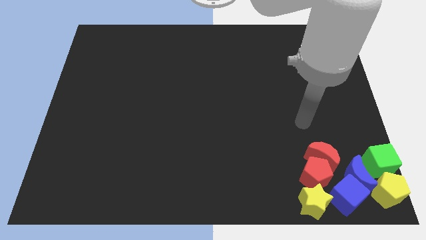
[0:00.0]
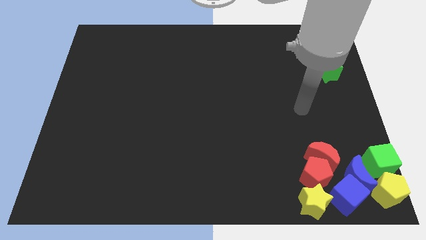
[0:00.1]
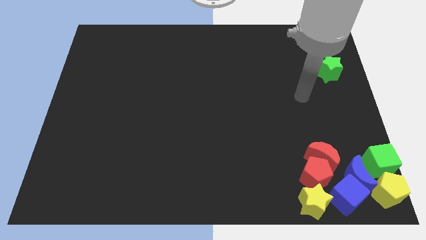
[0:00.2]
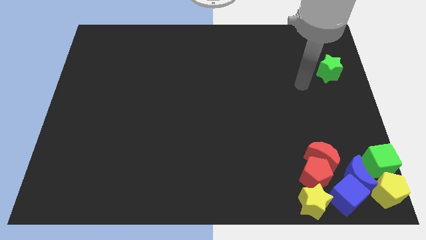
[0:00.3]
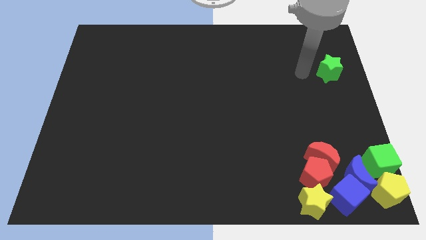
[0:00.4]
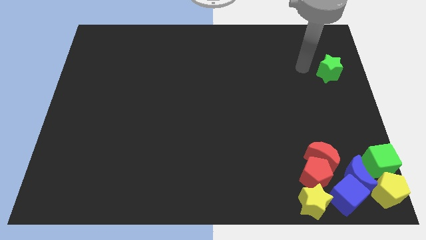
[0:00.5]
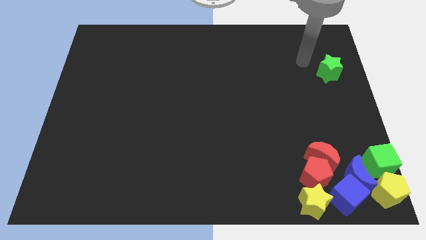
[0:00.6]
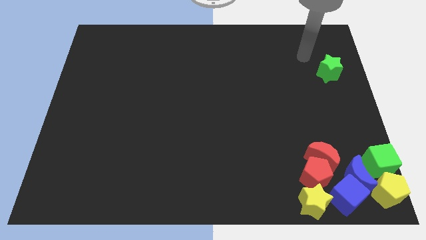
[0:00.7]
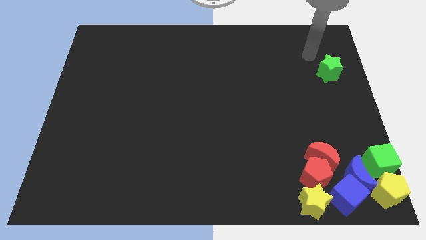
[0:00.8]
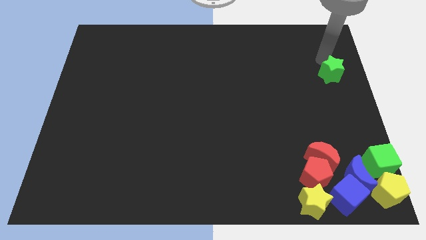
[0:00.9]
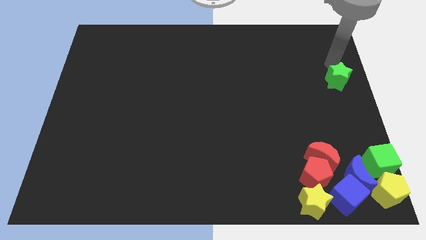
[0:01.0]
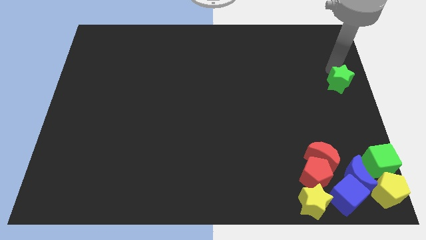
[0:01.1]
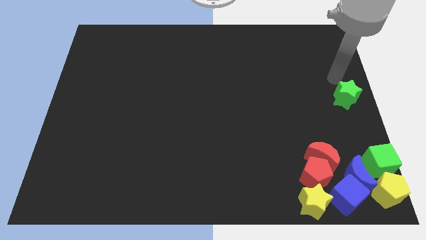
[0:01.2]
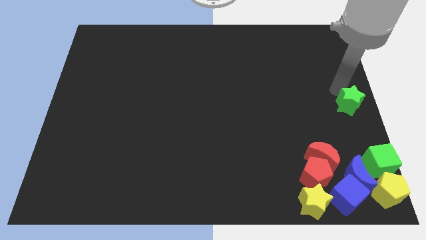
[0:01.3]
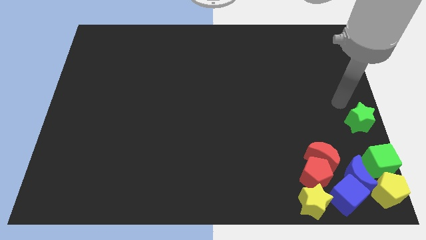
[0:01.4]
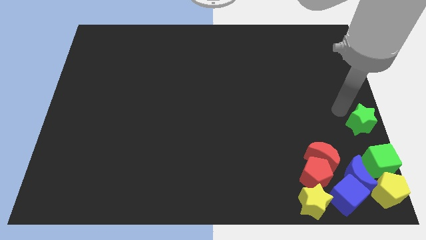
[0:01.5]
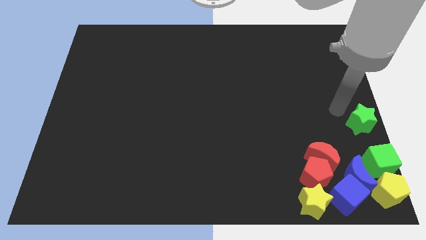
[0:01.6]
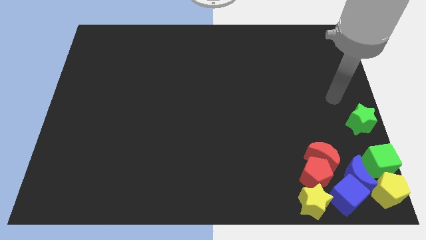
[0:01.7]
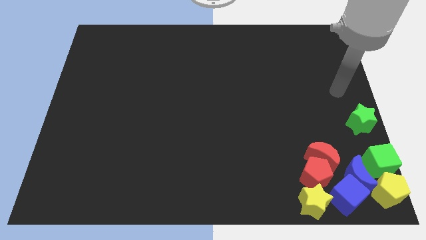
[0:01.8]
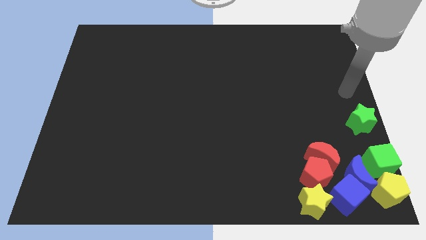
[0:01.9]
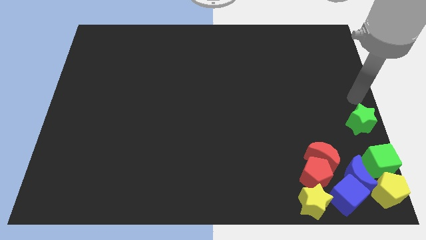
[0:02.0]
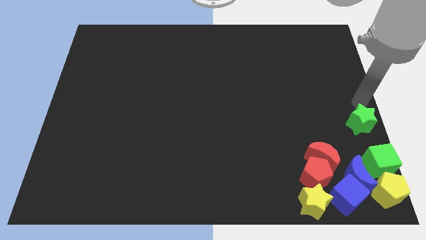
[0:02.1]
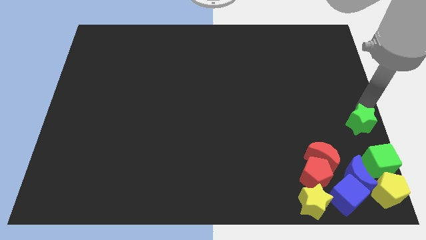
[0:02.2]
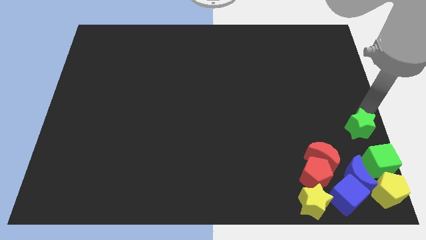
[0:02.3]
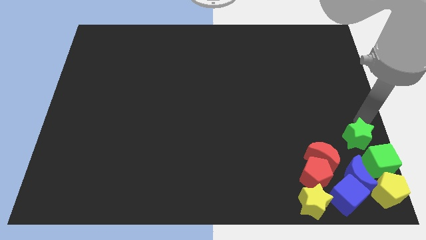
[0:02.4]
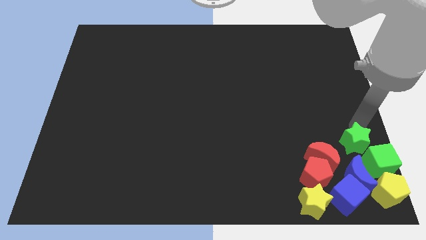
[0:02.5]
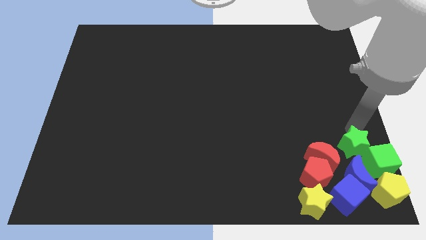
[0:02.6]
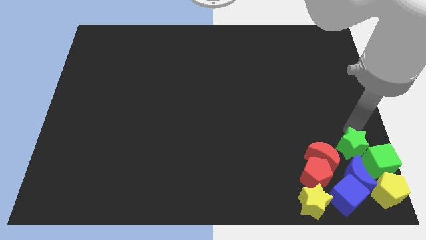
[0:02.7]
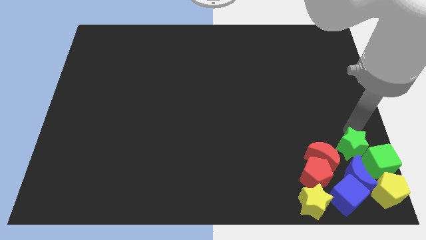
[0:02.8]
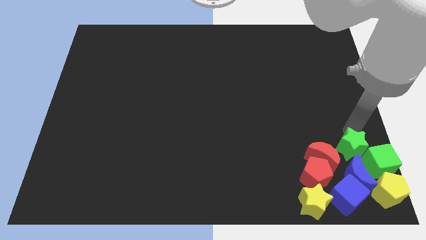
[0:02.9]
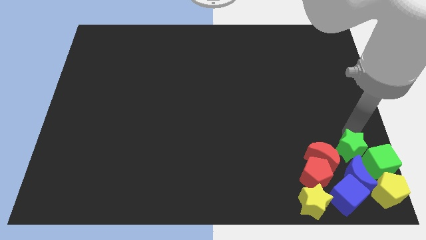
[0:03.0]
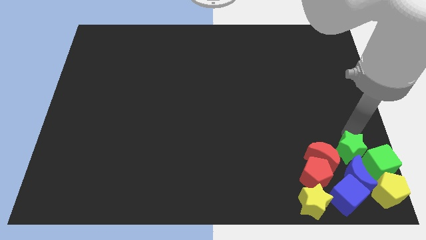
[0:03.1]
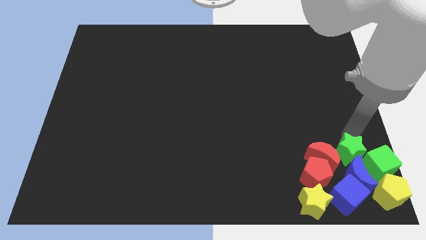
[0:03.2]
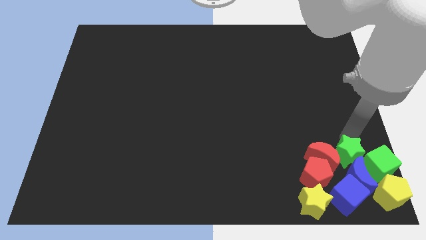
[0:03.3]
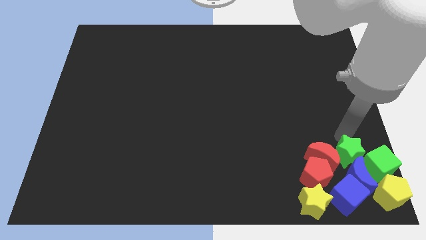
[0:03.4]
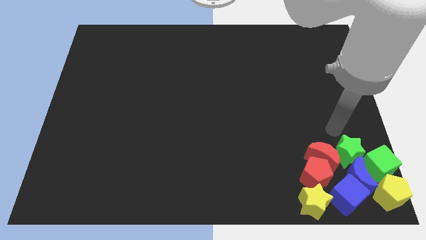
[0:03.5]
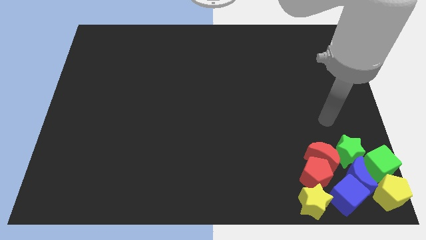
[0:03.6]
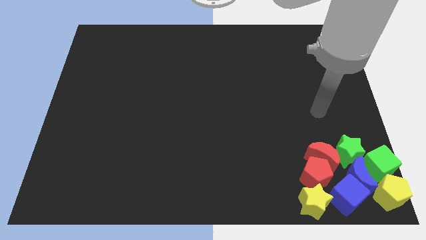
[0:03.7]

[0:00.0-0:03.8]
add the green star to the group of blocks at the bottom right side of the board

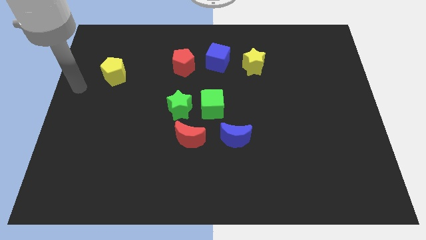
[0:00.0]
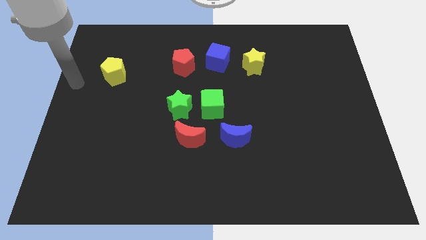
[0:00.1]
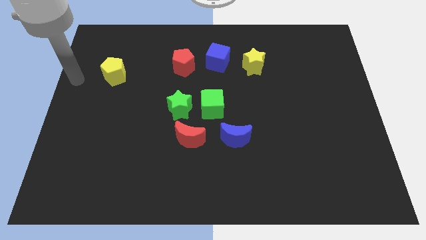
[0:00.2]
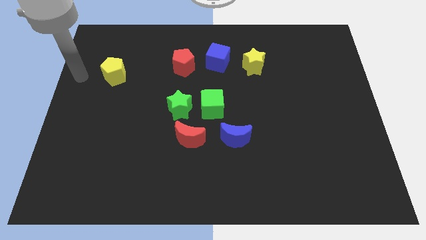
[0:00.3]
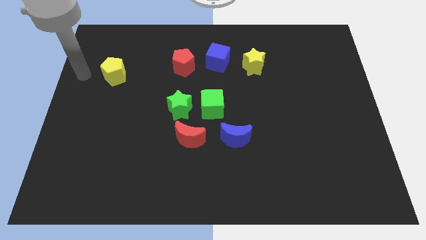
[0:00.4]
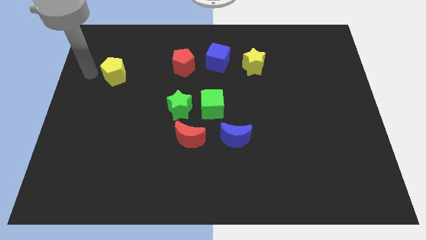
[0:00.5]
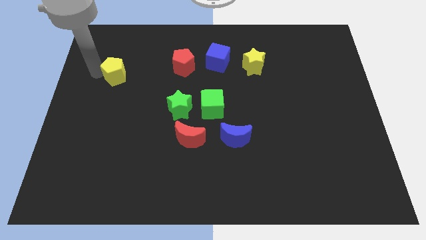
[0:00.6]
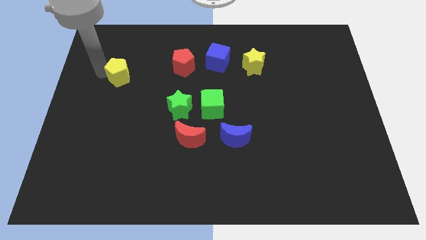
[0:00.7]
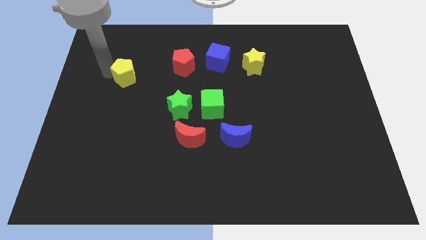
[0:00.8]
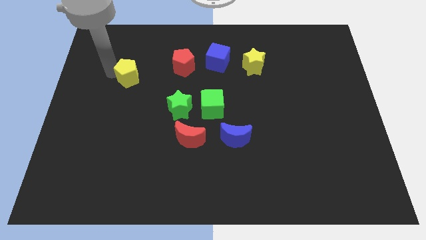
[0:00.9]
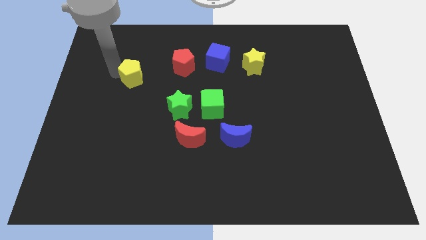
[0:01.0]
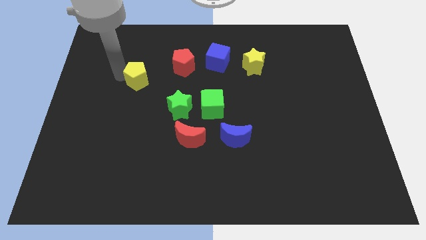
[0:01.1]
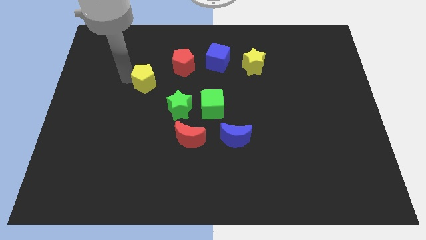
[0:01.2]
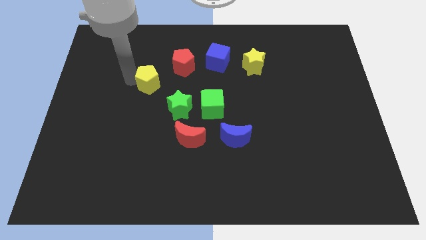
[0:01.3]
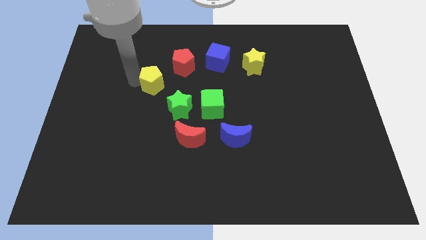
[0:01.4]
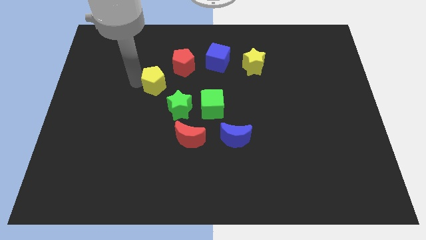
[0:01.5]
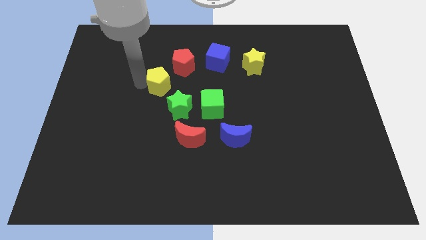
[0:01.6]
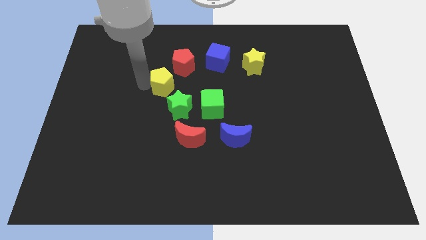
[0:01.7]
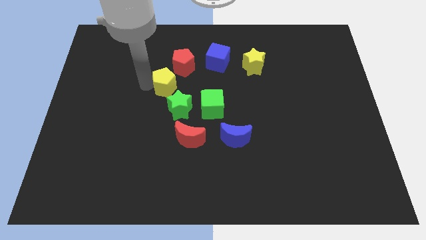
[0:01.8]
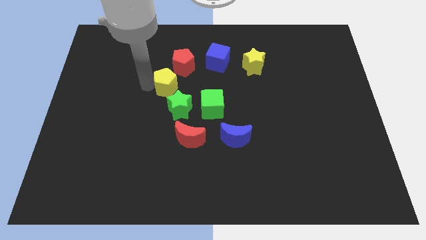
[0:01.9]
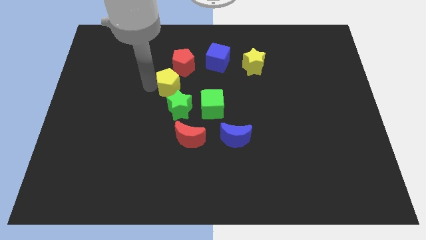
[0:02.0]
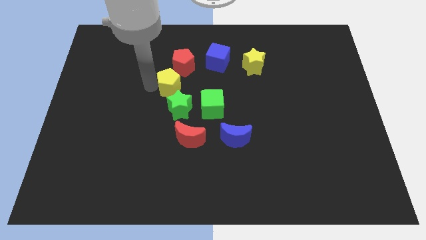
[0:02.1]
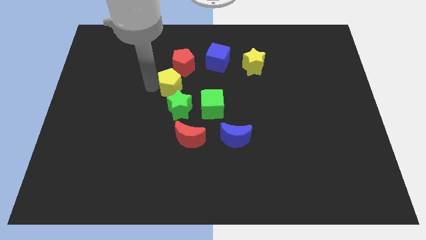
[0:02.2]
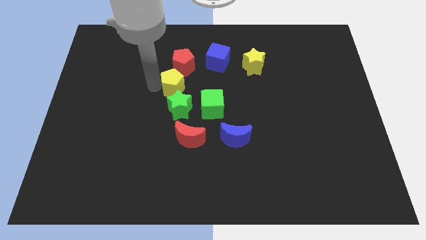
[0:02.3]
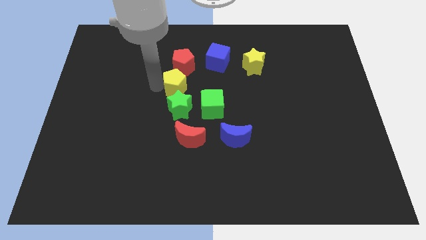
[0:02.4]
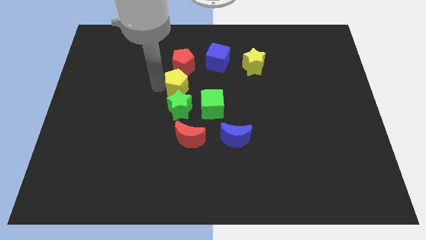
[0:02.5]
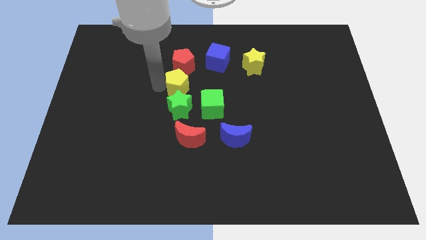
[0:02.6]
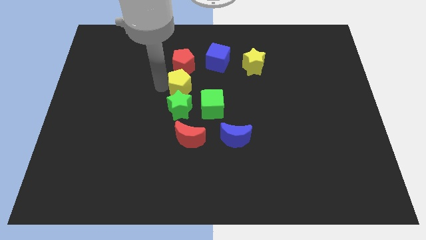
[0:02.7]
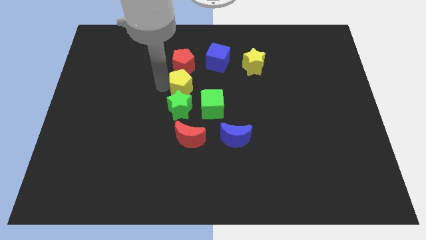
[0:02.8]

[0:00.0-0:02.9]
move the yellow pentagon between red pentagon and green star

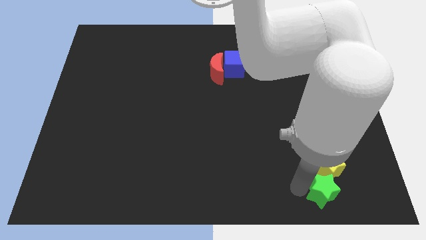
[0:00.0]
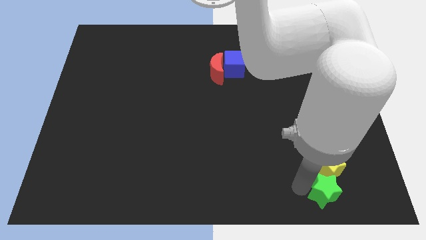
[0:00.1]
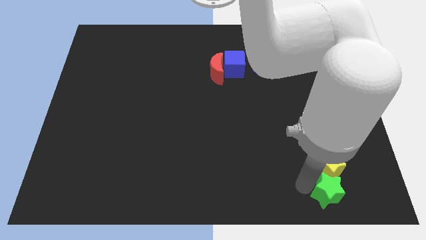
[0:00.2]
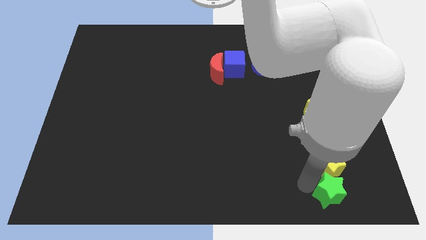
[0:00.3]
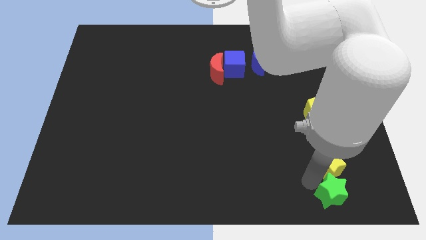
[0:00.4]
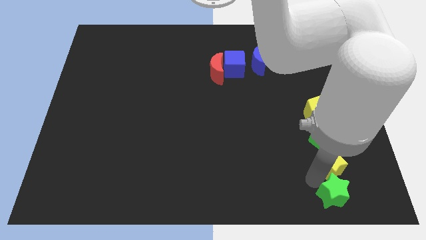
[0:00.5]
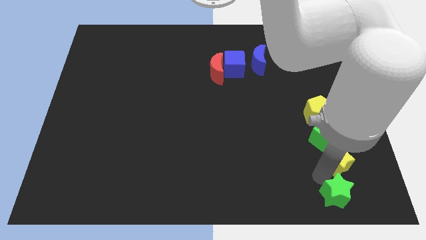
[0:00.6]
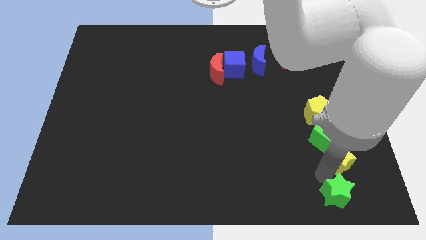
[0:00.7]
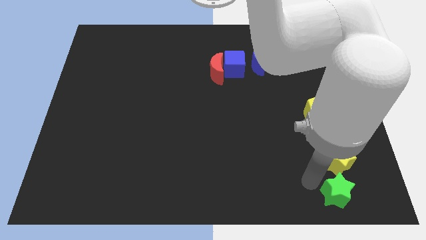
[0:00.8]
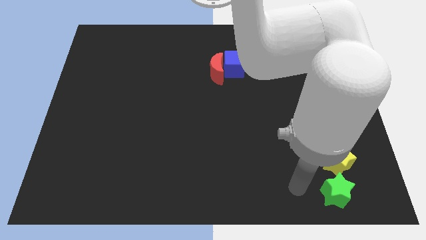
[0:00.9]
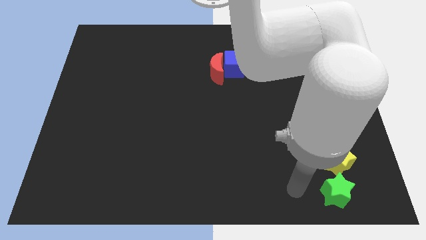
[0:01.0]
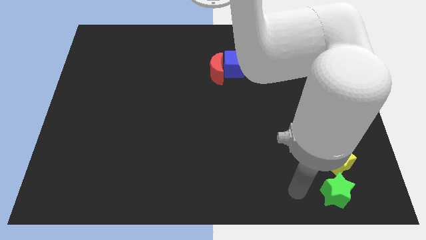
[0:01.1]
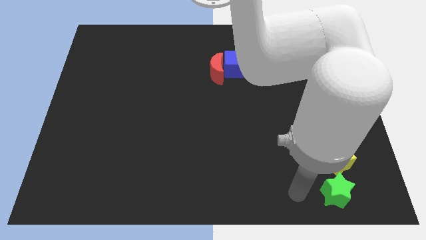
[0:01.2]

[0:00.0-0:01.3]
place the green star below the yellow star

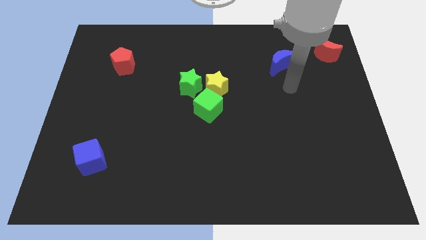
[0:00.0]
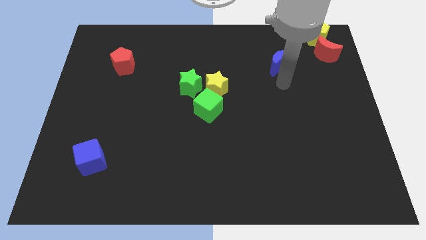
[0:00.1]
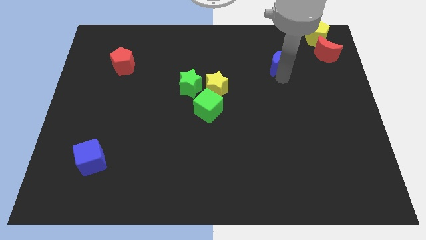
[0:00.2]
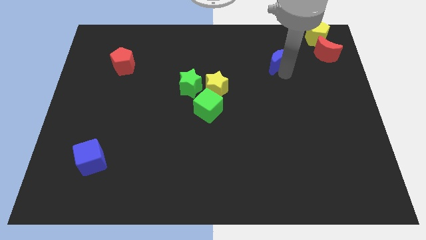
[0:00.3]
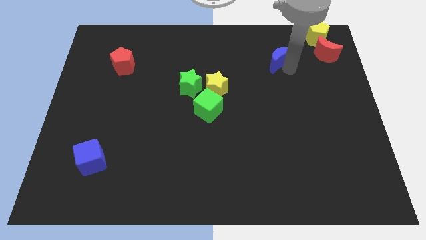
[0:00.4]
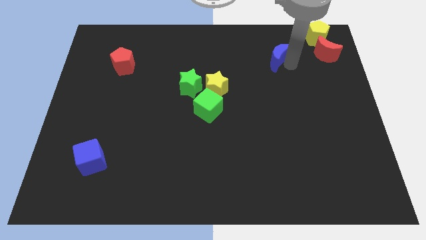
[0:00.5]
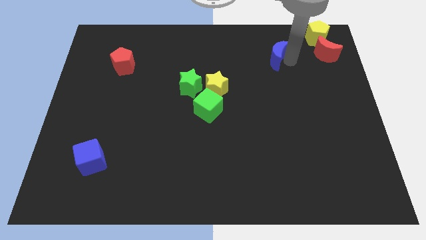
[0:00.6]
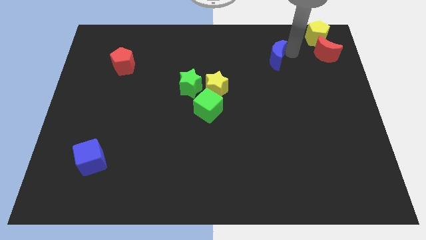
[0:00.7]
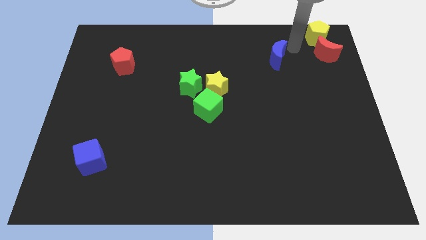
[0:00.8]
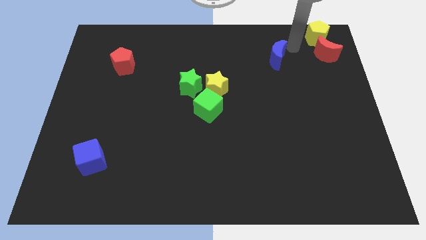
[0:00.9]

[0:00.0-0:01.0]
slightly push the blue crescent
